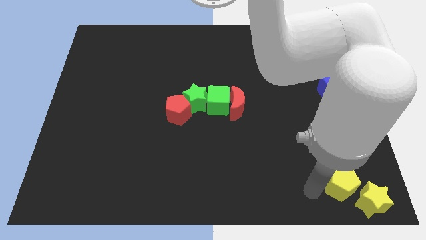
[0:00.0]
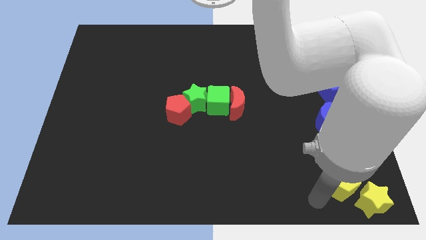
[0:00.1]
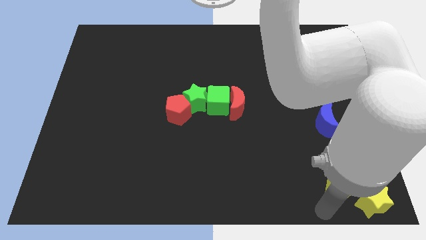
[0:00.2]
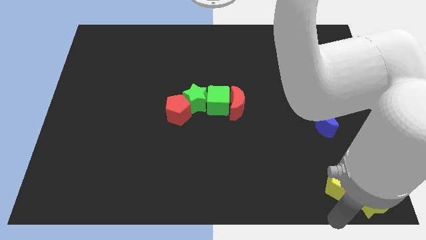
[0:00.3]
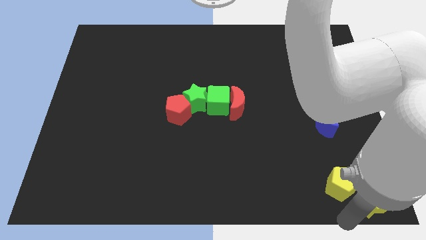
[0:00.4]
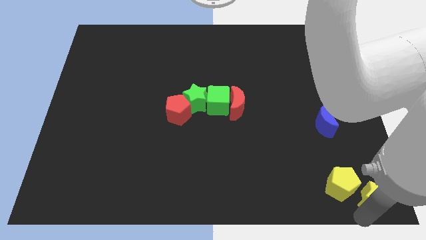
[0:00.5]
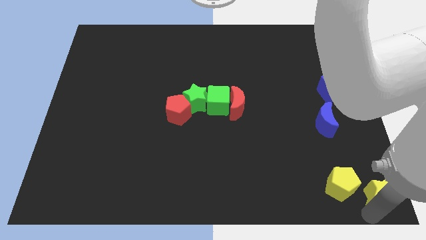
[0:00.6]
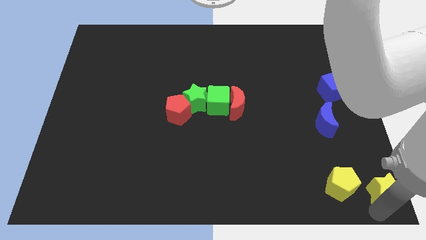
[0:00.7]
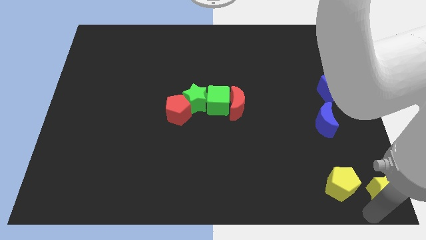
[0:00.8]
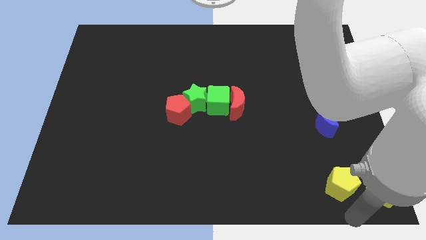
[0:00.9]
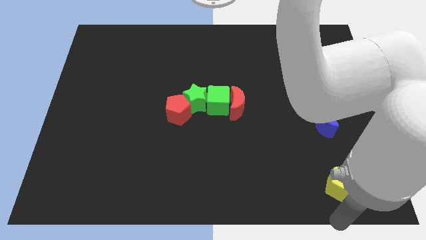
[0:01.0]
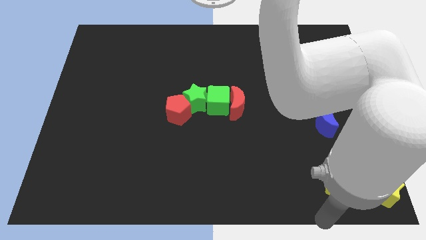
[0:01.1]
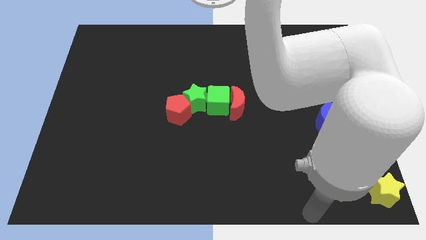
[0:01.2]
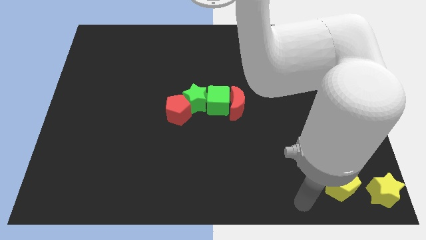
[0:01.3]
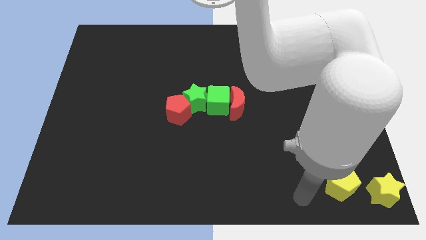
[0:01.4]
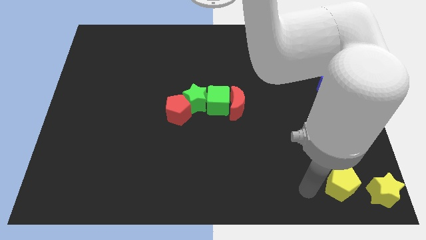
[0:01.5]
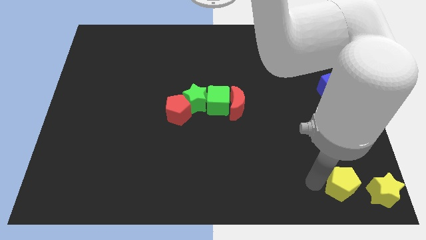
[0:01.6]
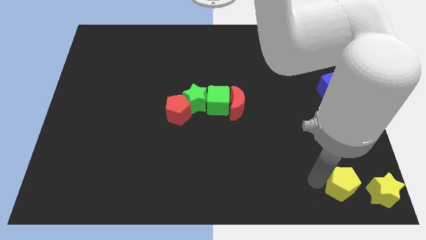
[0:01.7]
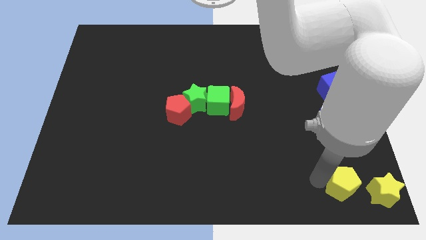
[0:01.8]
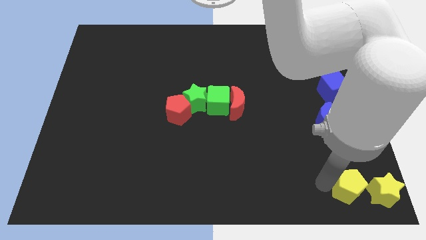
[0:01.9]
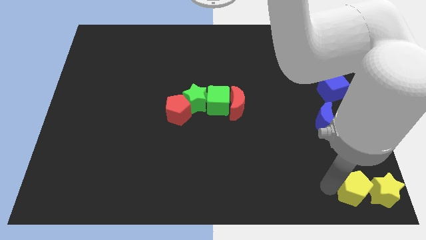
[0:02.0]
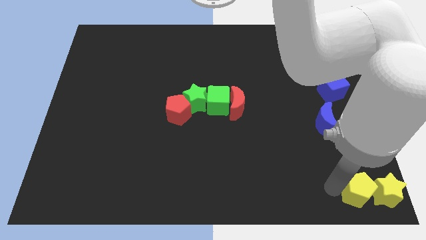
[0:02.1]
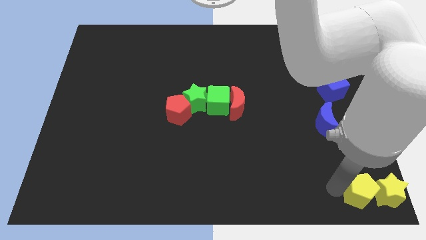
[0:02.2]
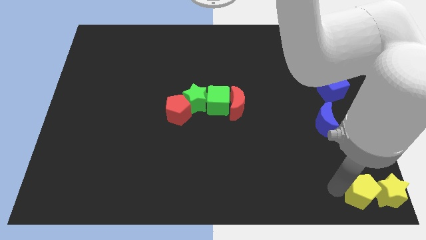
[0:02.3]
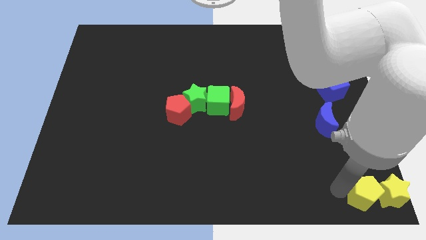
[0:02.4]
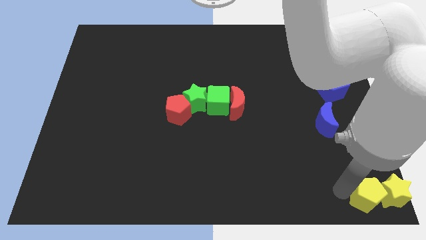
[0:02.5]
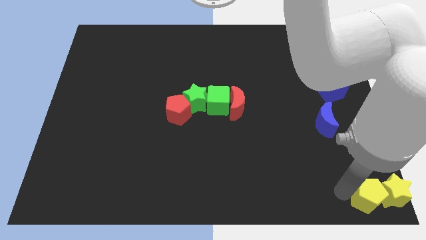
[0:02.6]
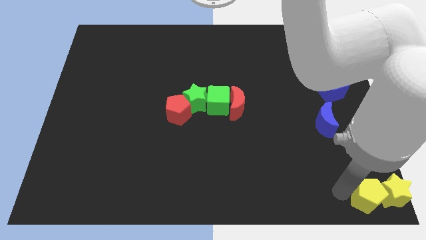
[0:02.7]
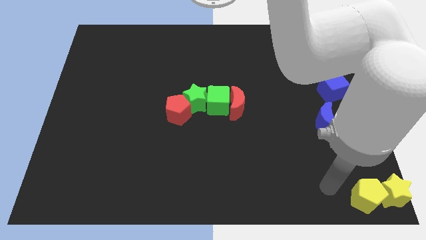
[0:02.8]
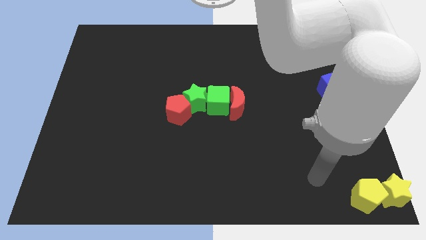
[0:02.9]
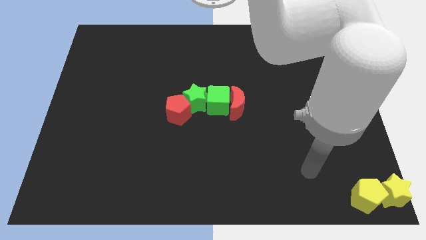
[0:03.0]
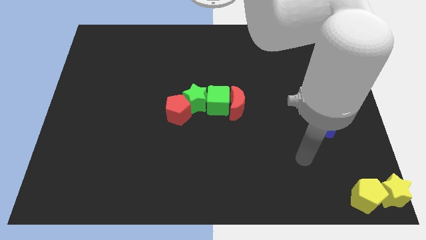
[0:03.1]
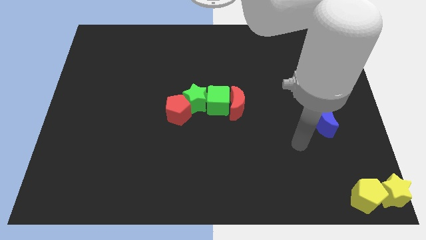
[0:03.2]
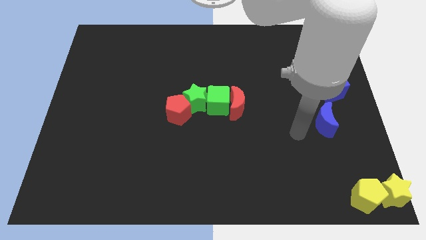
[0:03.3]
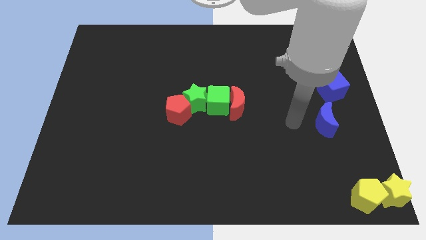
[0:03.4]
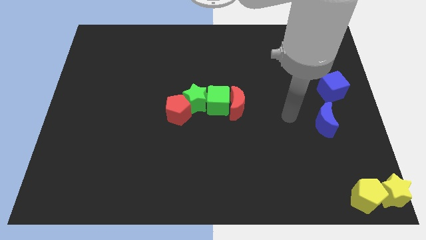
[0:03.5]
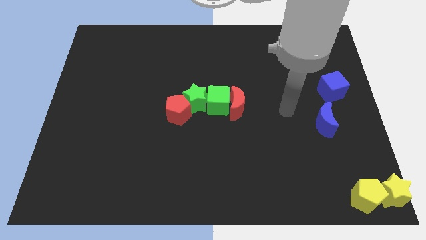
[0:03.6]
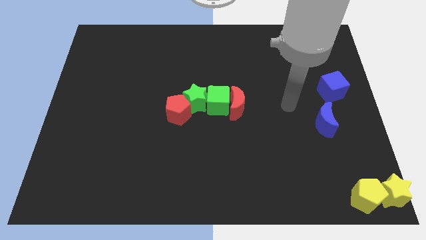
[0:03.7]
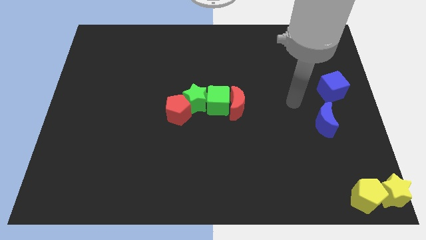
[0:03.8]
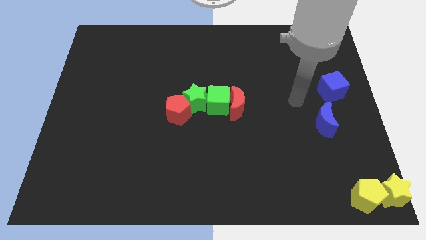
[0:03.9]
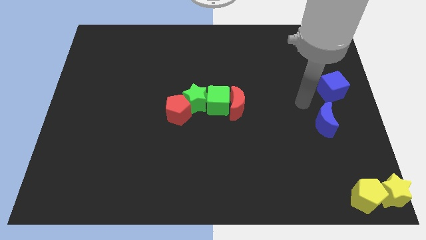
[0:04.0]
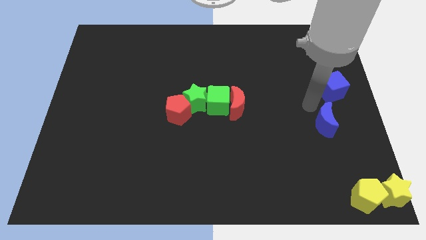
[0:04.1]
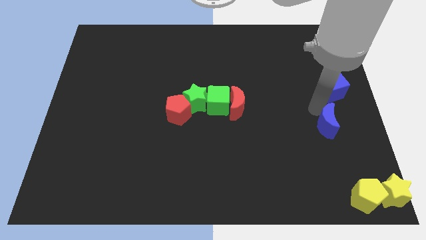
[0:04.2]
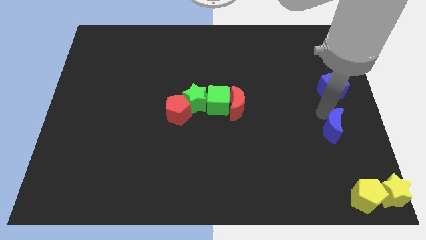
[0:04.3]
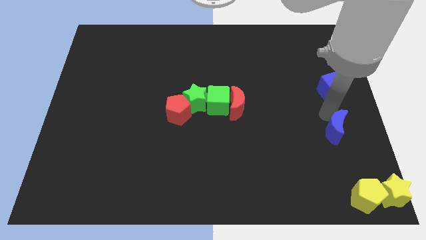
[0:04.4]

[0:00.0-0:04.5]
adjust the yellow blocks towards the bottom right of the board

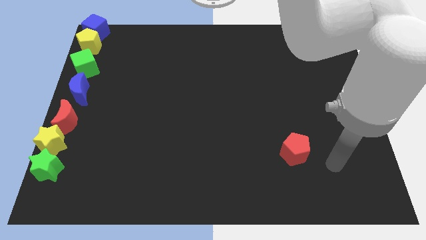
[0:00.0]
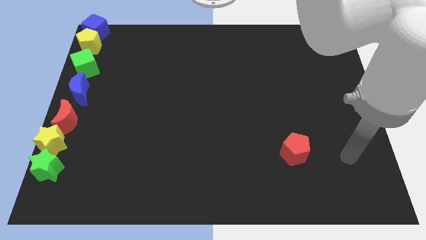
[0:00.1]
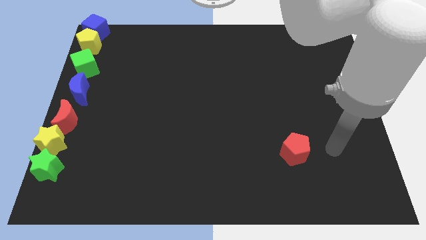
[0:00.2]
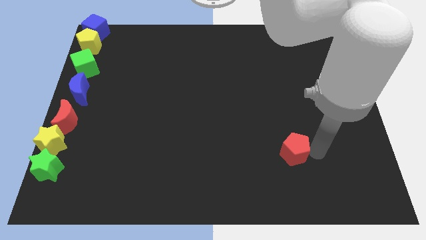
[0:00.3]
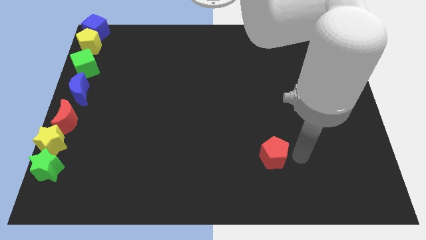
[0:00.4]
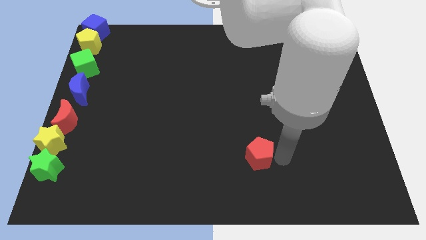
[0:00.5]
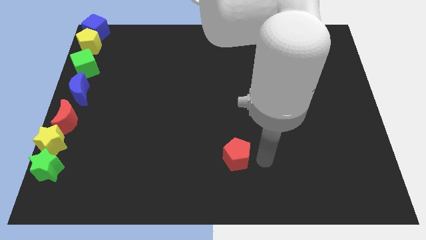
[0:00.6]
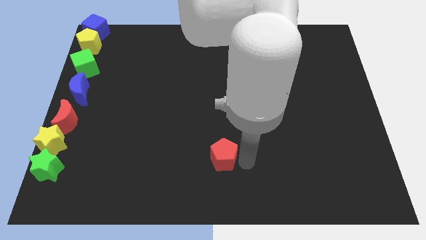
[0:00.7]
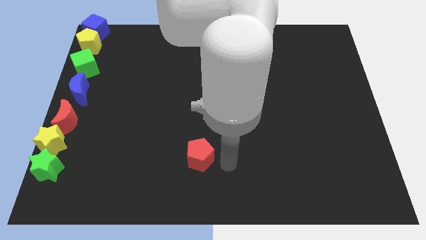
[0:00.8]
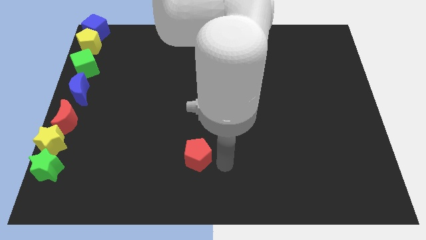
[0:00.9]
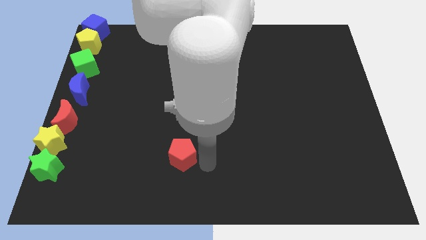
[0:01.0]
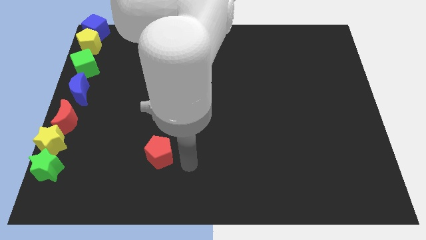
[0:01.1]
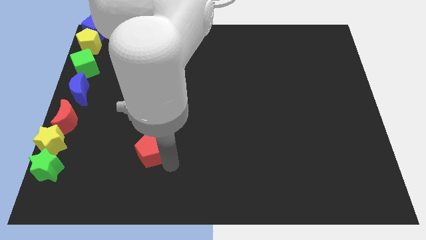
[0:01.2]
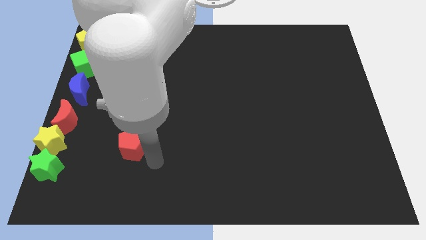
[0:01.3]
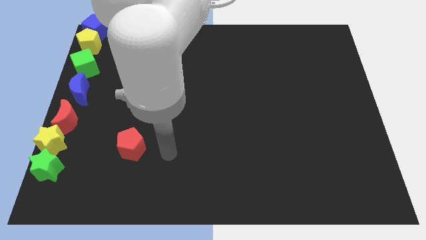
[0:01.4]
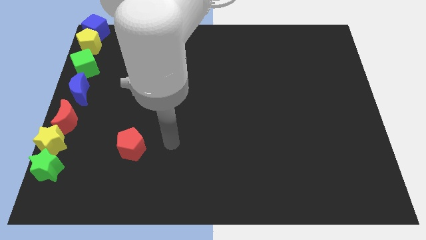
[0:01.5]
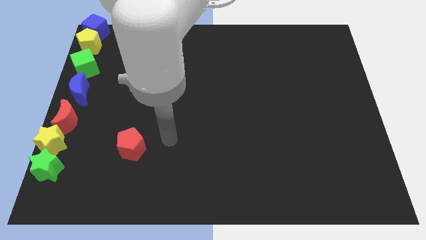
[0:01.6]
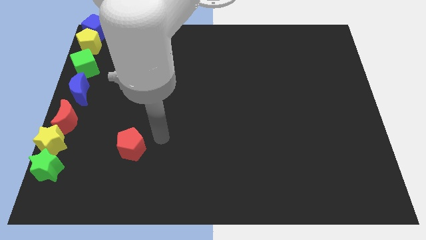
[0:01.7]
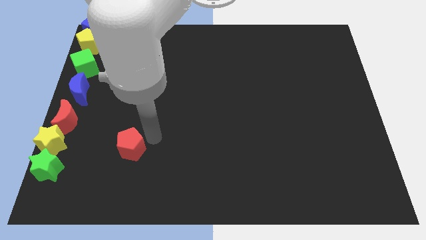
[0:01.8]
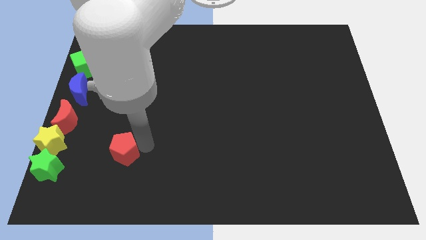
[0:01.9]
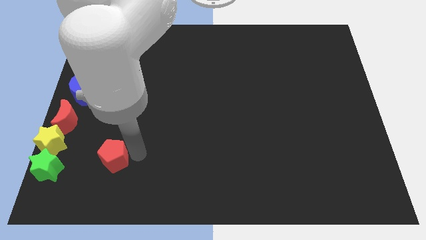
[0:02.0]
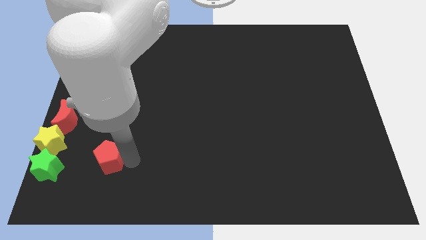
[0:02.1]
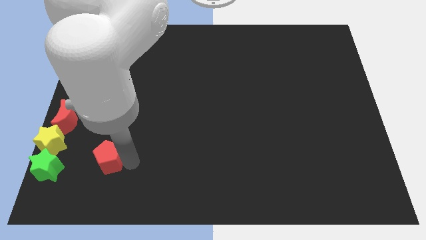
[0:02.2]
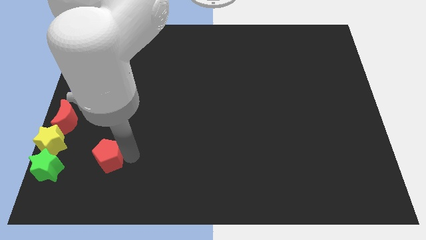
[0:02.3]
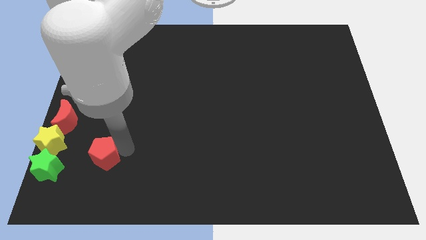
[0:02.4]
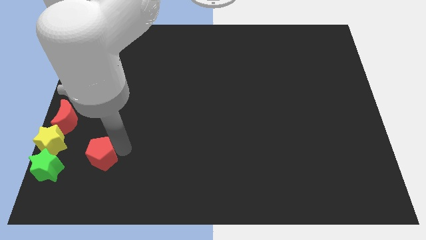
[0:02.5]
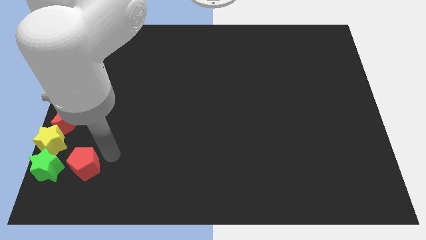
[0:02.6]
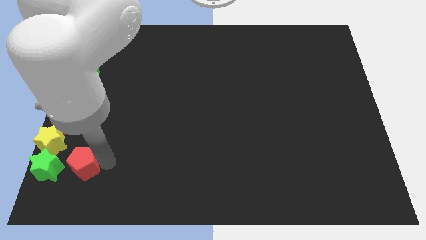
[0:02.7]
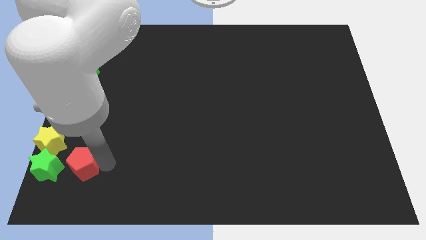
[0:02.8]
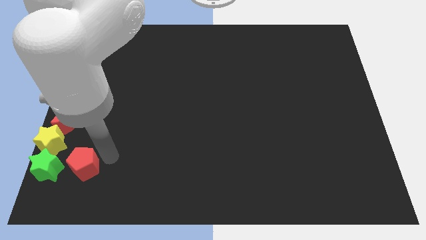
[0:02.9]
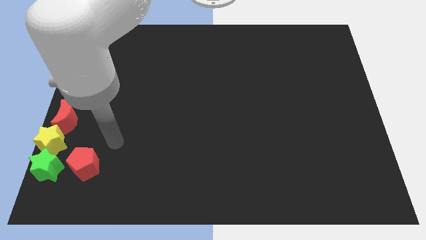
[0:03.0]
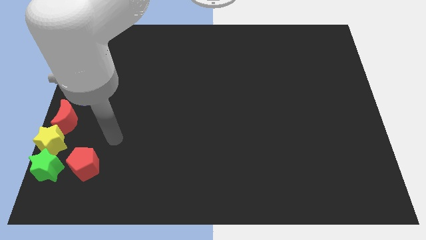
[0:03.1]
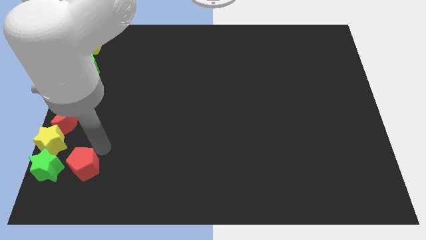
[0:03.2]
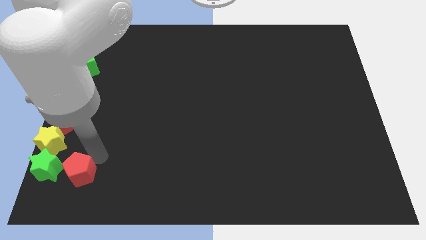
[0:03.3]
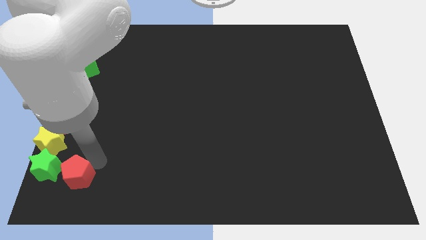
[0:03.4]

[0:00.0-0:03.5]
place the red pentagon right to the green star

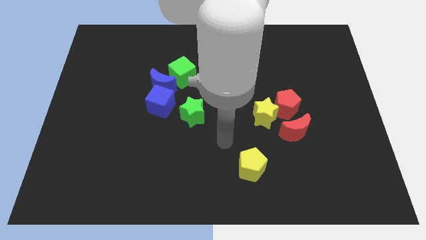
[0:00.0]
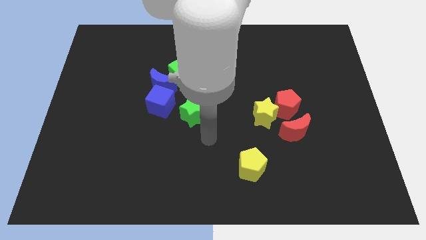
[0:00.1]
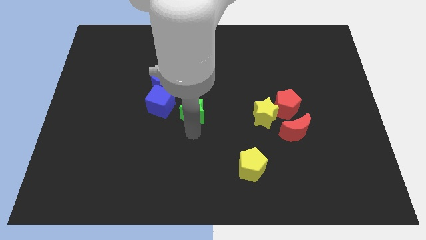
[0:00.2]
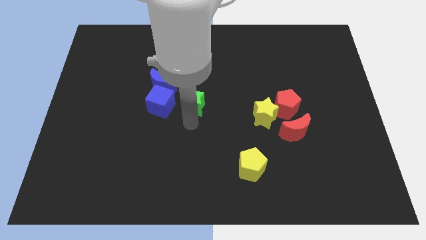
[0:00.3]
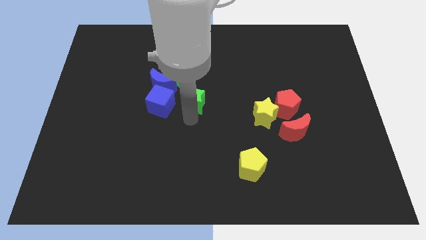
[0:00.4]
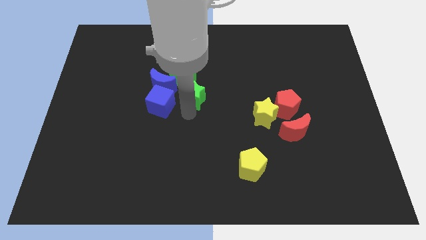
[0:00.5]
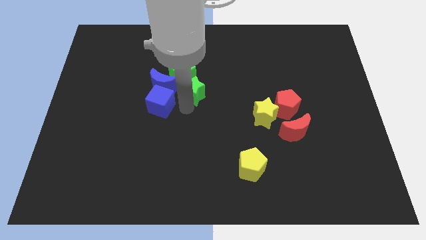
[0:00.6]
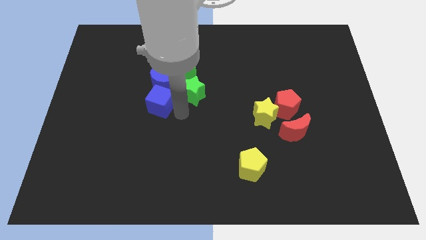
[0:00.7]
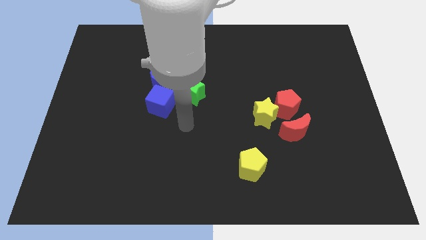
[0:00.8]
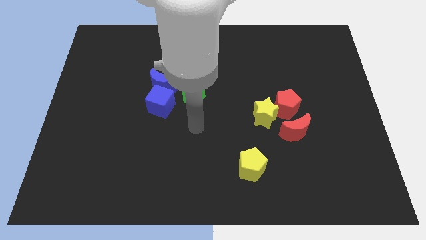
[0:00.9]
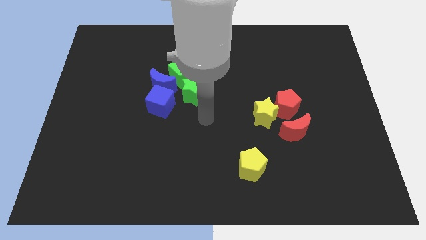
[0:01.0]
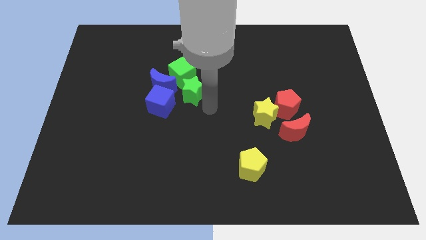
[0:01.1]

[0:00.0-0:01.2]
push the green star into the green cube
